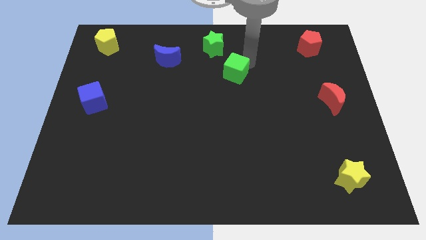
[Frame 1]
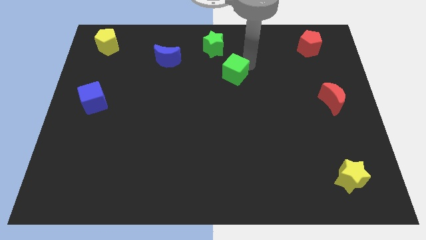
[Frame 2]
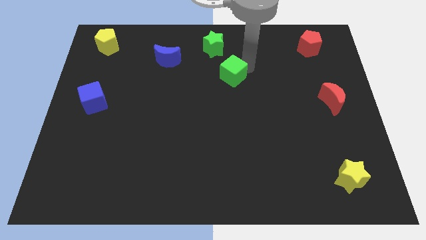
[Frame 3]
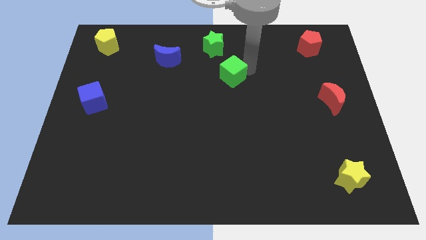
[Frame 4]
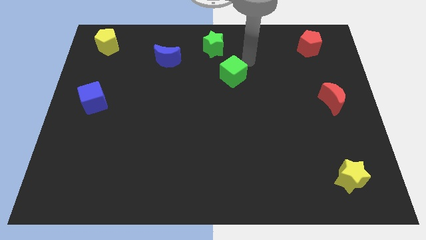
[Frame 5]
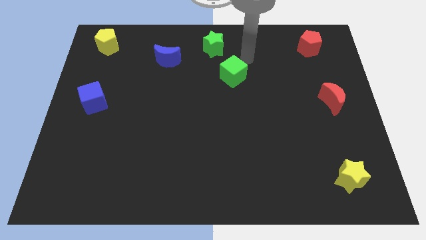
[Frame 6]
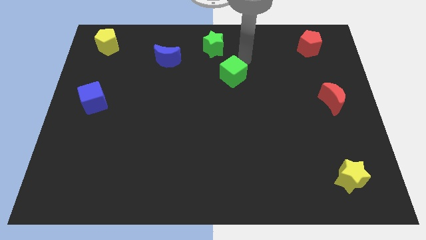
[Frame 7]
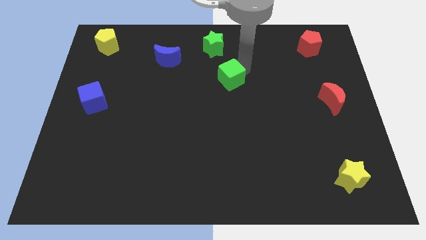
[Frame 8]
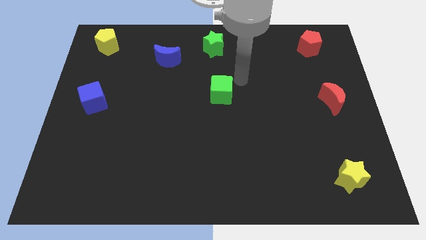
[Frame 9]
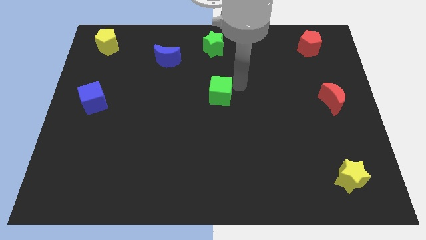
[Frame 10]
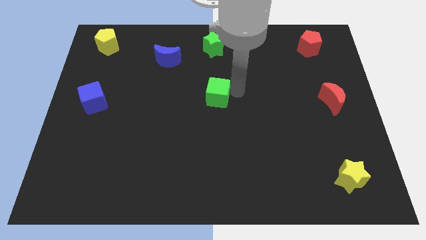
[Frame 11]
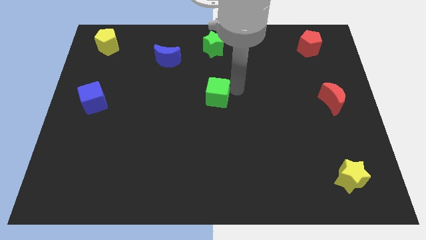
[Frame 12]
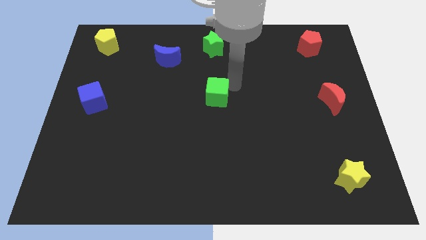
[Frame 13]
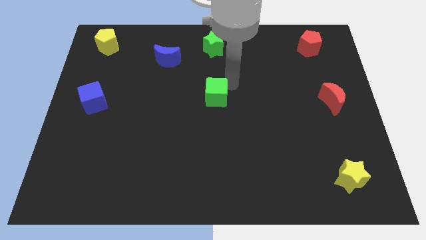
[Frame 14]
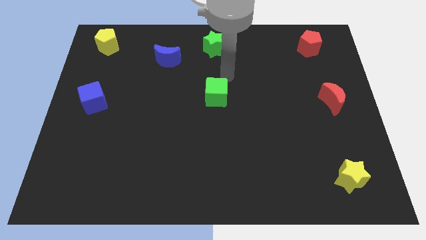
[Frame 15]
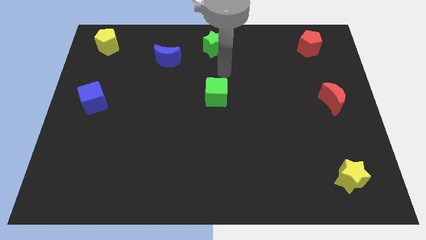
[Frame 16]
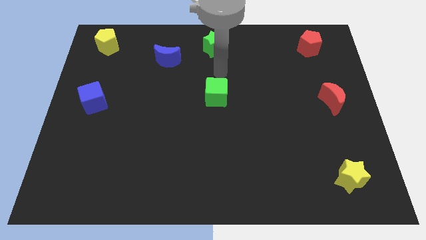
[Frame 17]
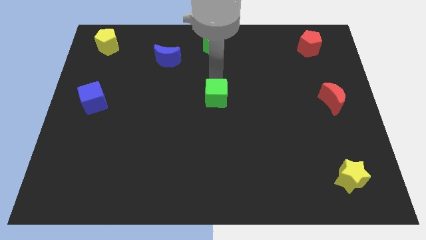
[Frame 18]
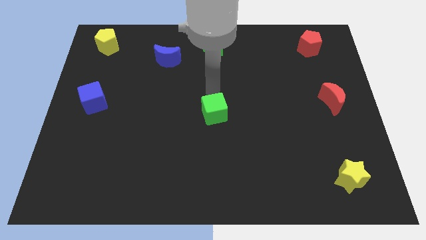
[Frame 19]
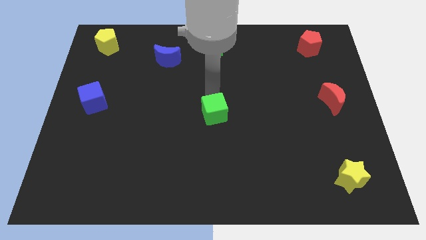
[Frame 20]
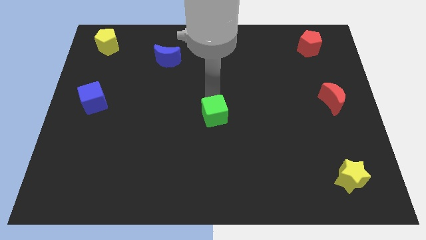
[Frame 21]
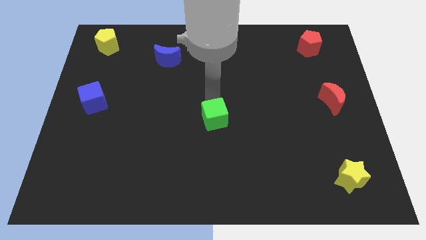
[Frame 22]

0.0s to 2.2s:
move the green cube to the center of the board

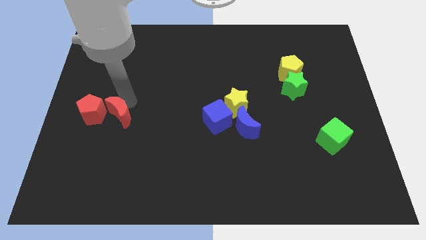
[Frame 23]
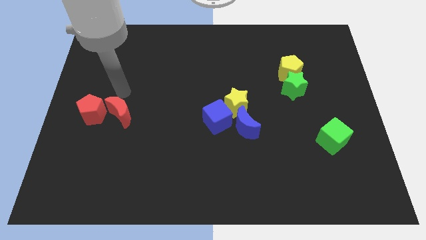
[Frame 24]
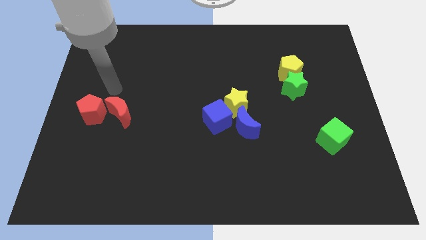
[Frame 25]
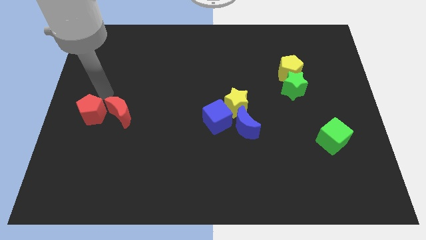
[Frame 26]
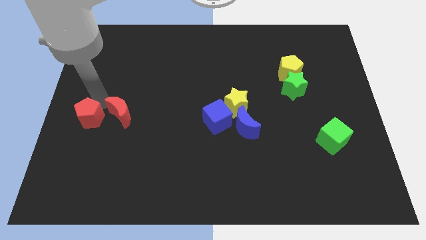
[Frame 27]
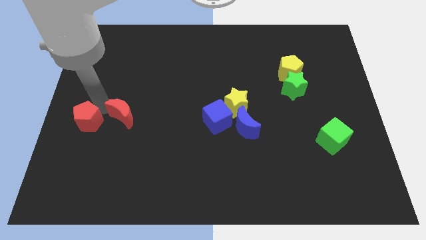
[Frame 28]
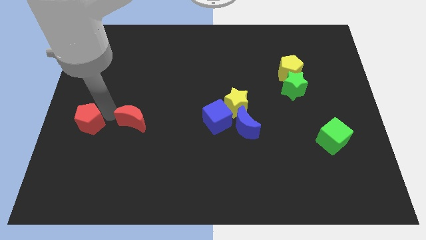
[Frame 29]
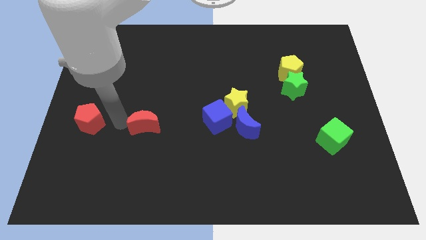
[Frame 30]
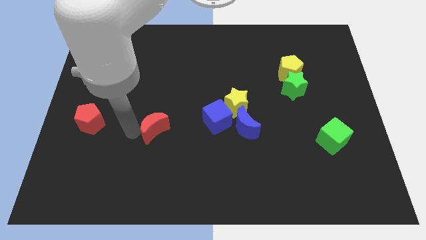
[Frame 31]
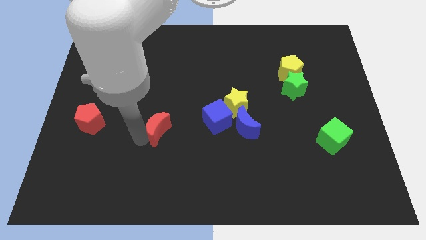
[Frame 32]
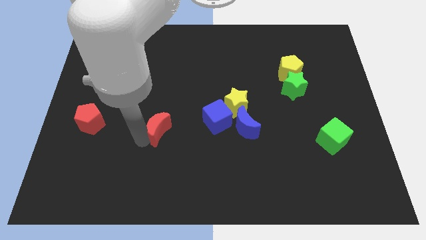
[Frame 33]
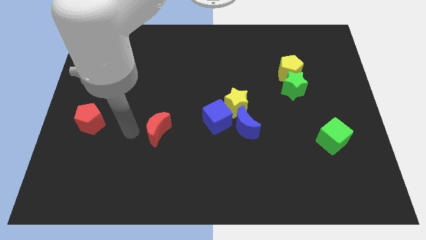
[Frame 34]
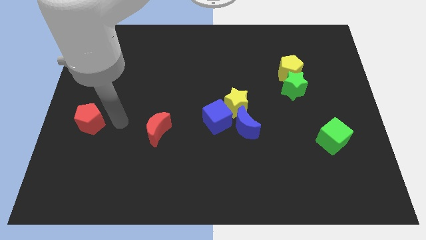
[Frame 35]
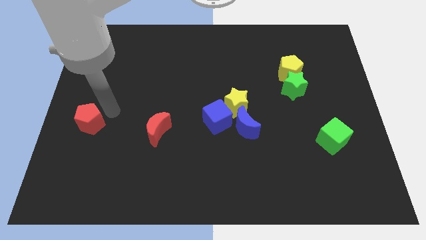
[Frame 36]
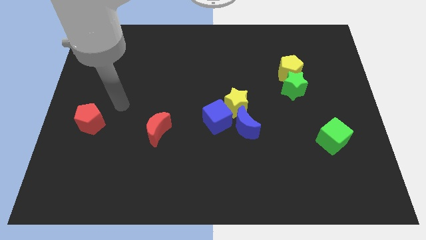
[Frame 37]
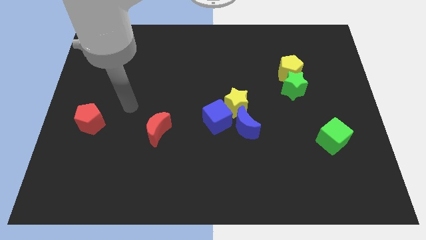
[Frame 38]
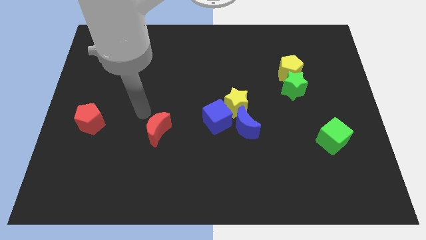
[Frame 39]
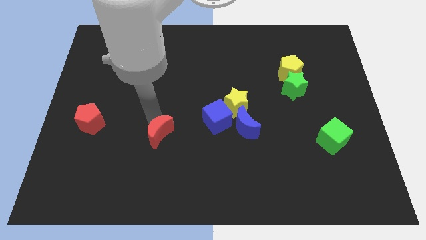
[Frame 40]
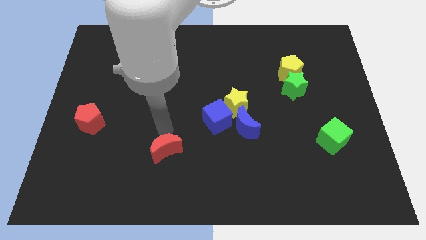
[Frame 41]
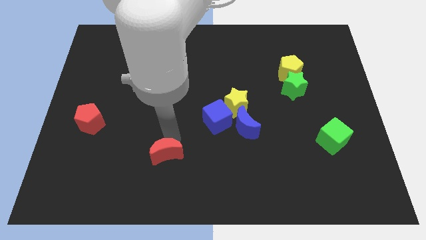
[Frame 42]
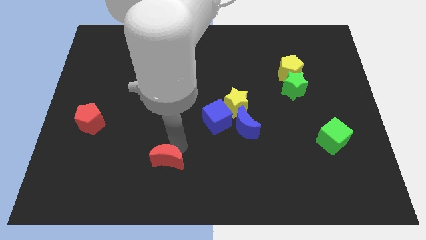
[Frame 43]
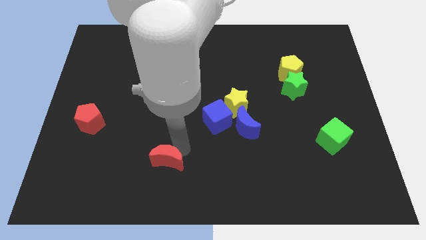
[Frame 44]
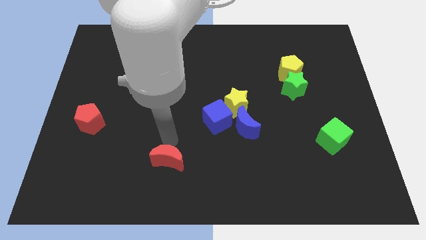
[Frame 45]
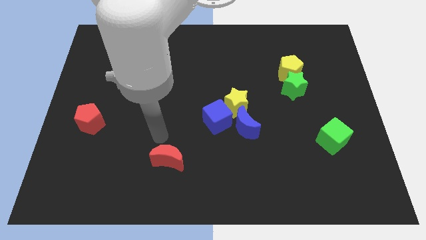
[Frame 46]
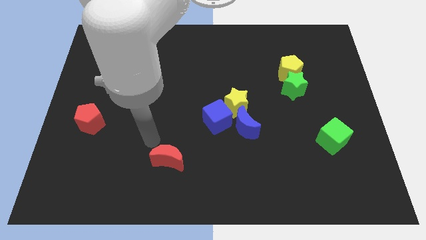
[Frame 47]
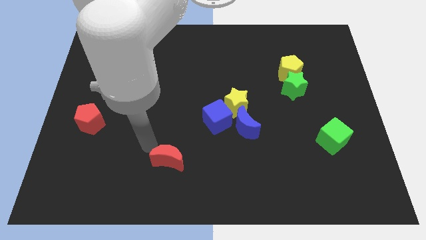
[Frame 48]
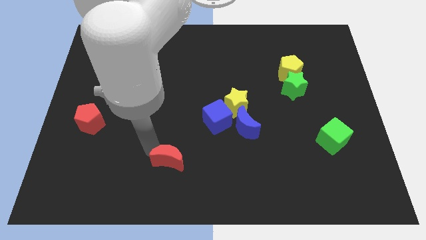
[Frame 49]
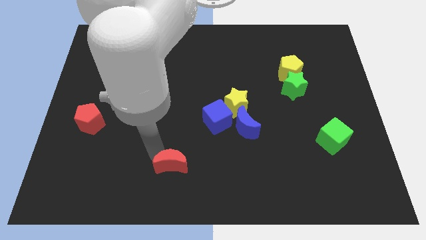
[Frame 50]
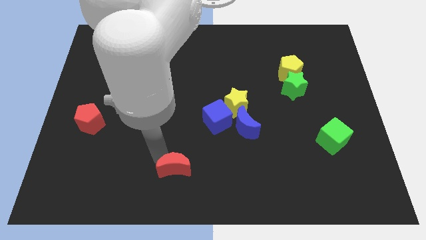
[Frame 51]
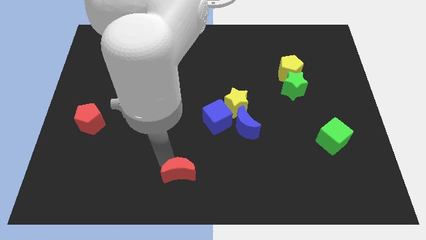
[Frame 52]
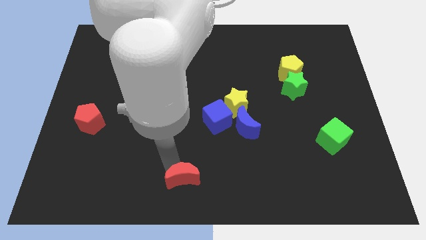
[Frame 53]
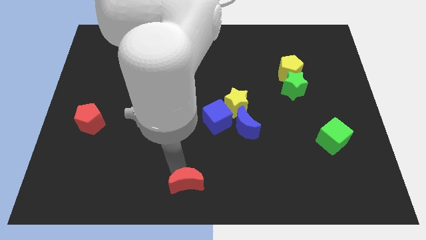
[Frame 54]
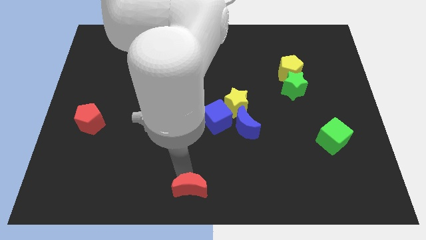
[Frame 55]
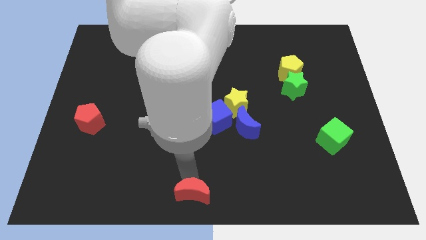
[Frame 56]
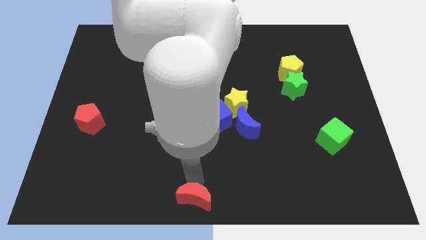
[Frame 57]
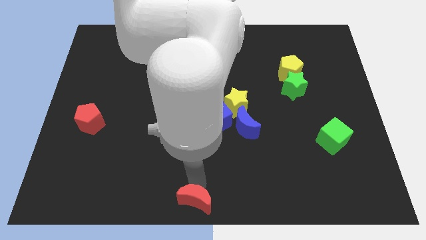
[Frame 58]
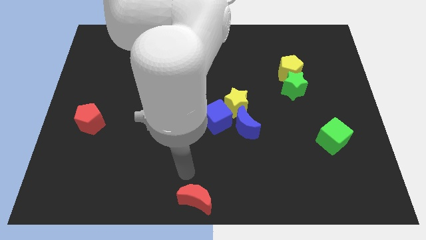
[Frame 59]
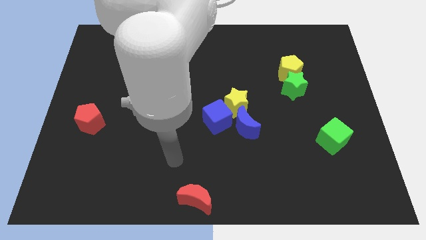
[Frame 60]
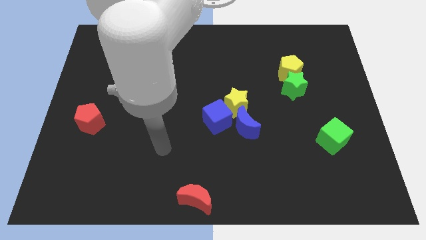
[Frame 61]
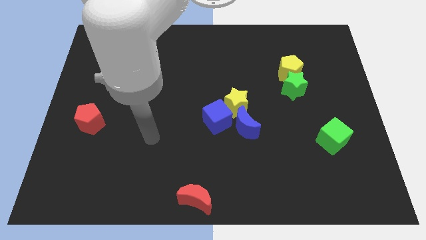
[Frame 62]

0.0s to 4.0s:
place the red moon to the bottom center of the board

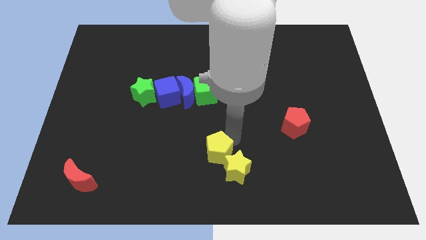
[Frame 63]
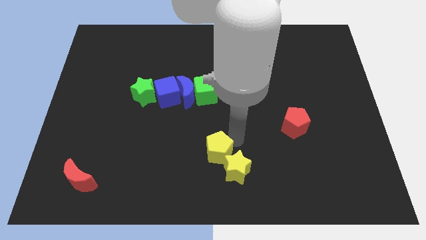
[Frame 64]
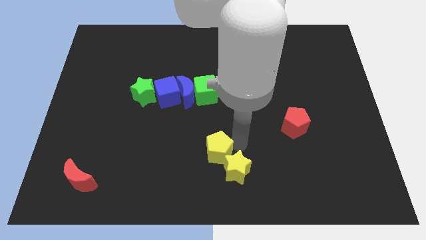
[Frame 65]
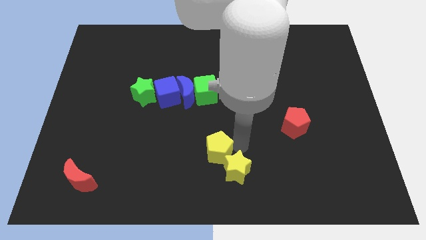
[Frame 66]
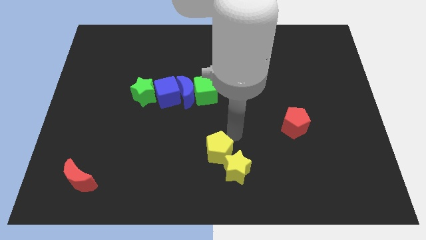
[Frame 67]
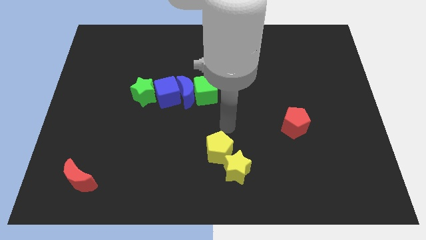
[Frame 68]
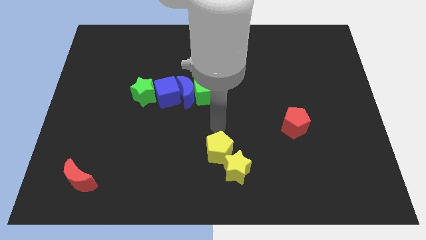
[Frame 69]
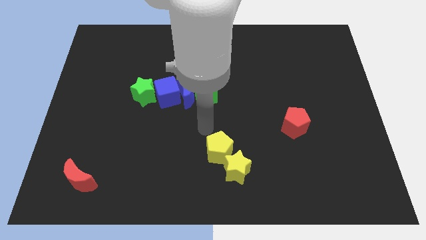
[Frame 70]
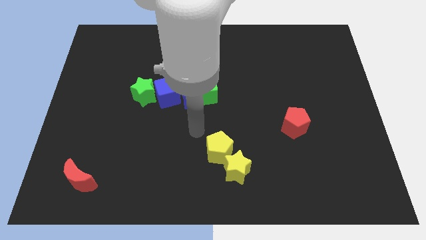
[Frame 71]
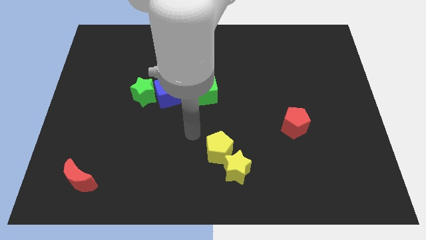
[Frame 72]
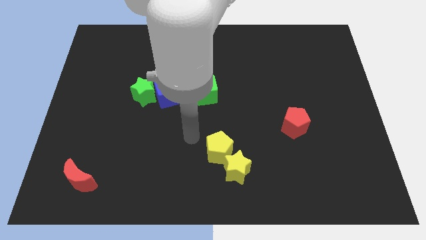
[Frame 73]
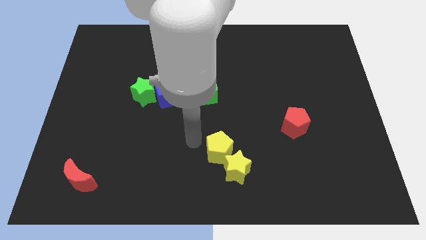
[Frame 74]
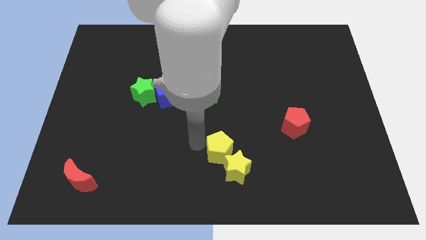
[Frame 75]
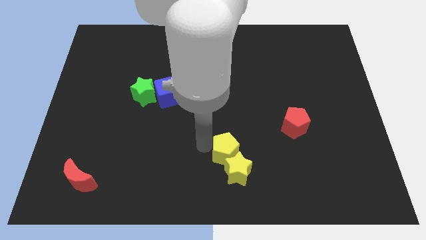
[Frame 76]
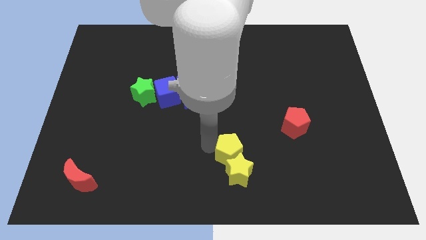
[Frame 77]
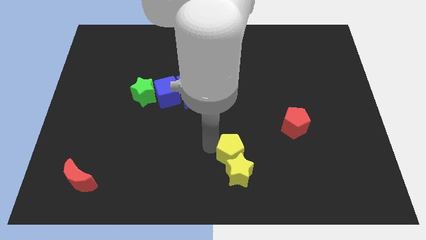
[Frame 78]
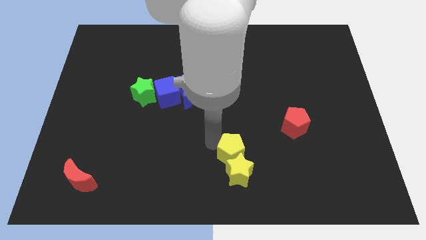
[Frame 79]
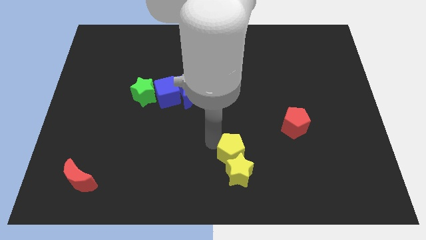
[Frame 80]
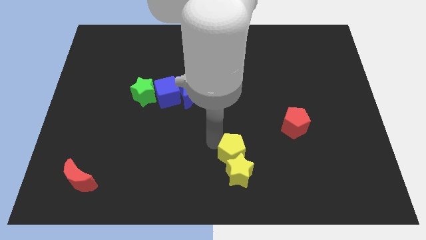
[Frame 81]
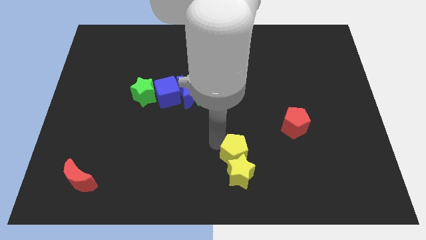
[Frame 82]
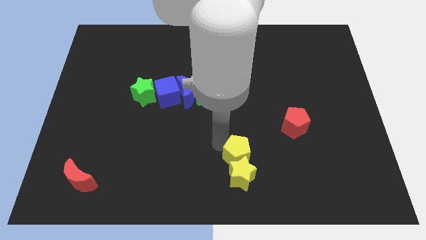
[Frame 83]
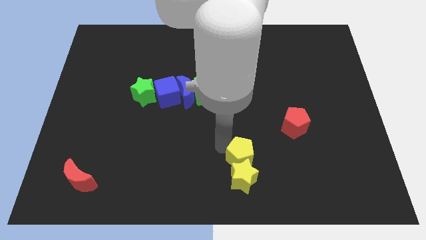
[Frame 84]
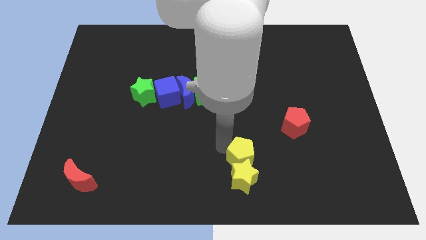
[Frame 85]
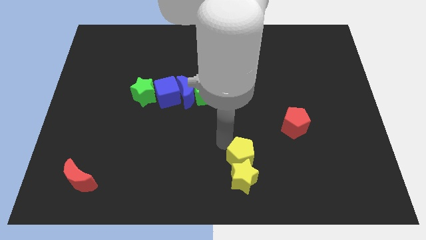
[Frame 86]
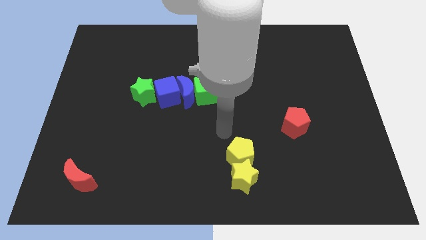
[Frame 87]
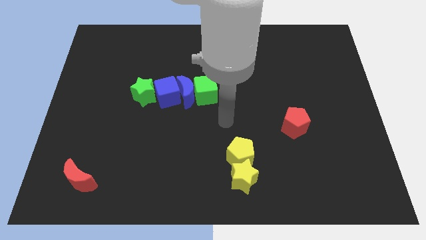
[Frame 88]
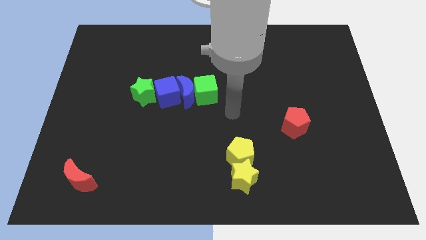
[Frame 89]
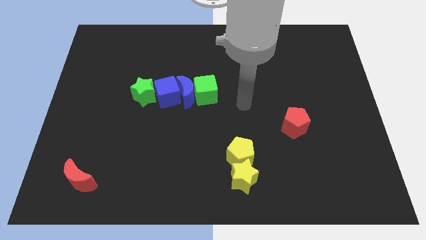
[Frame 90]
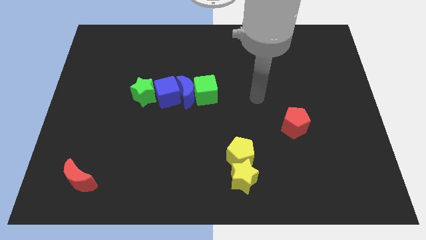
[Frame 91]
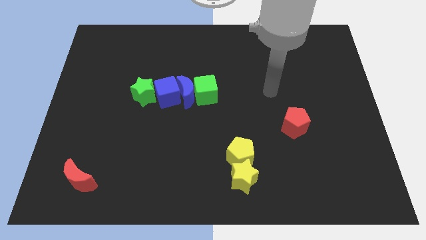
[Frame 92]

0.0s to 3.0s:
slightly move the yellow pentagon into the yellow star
